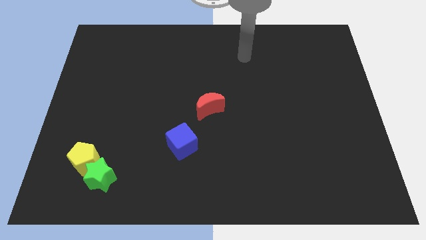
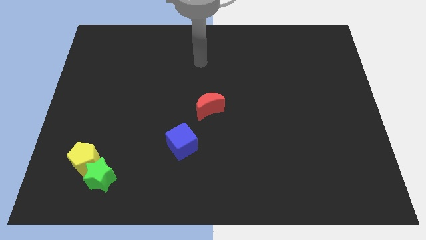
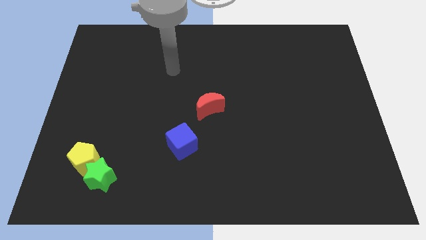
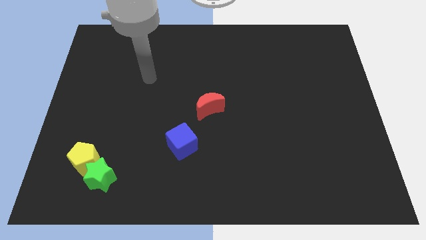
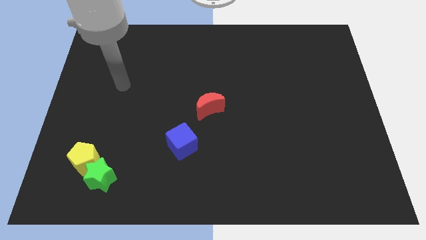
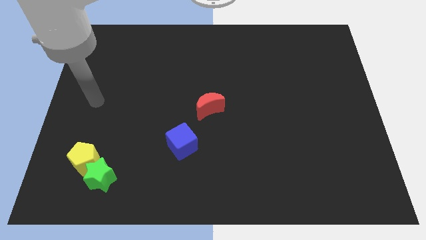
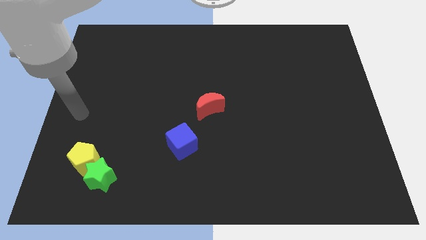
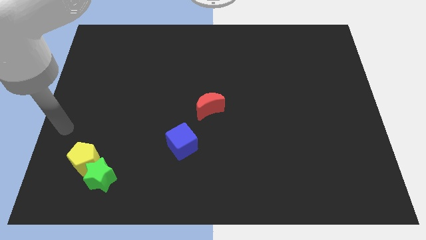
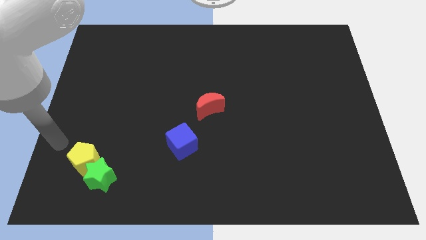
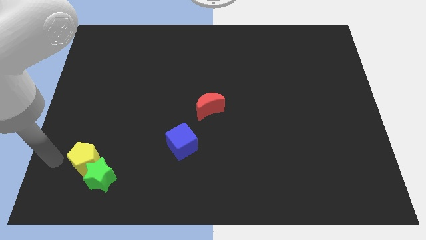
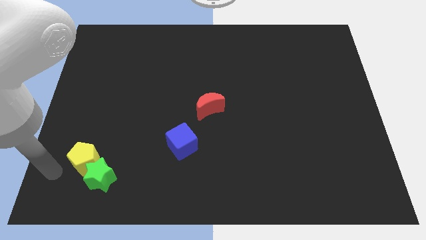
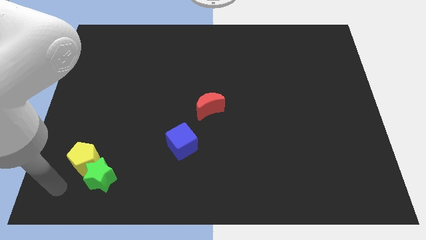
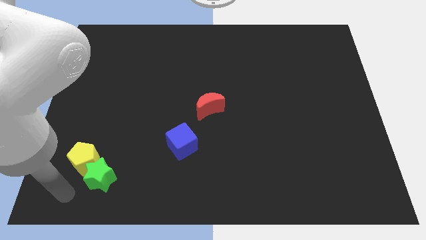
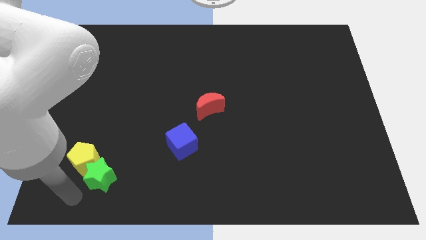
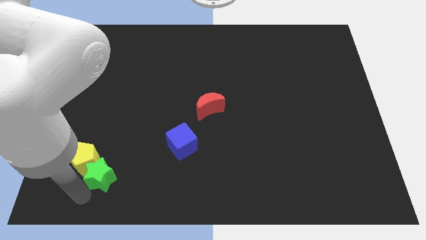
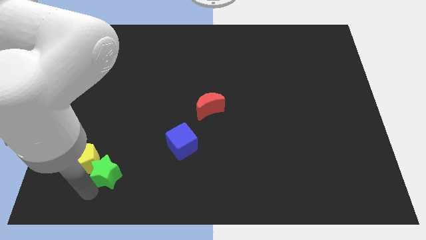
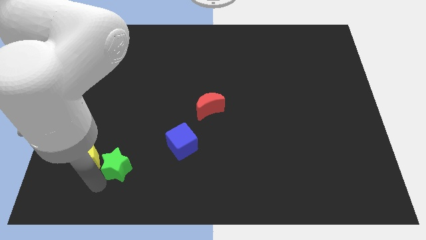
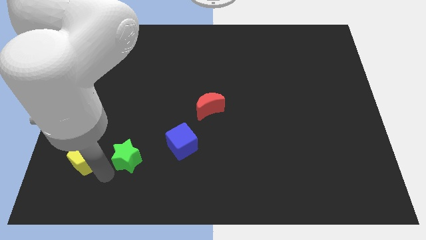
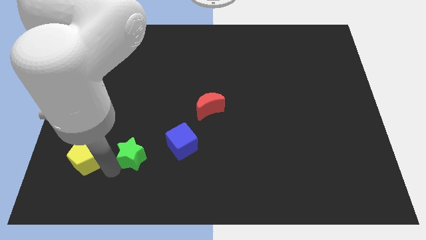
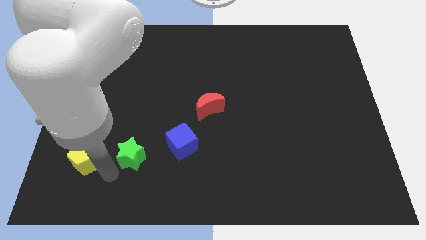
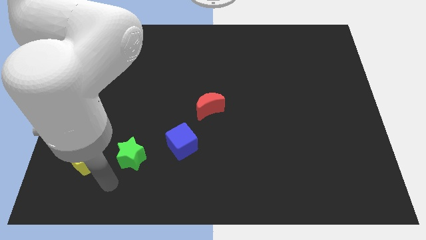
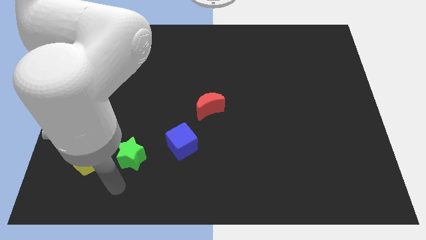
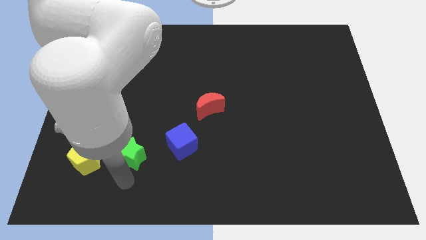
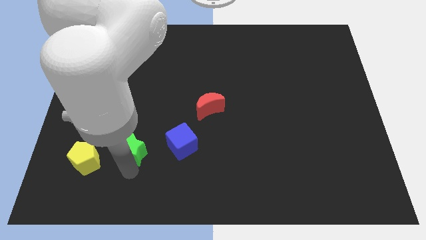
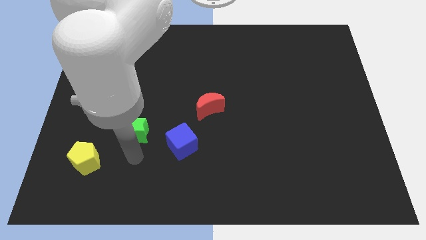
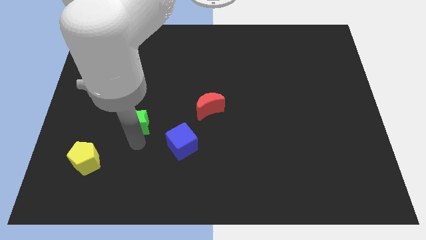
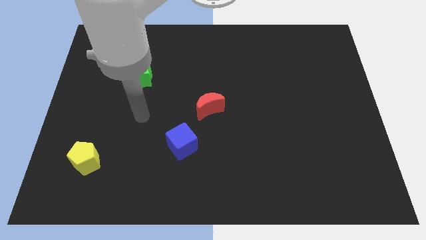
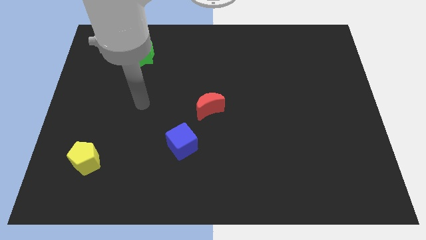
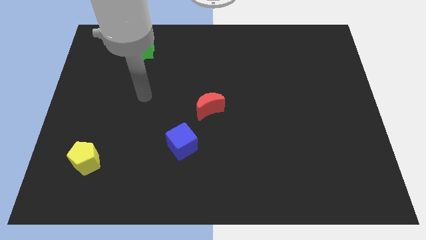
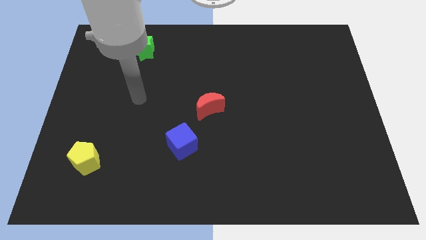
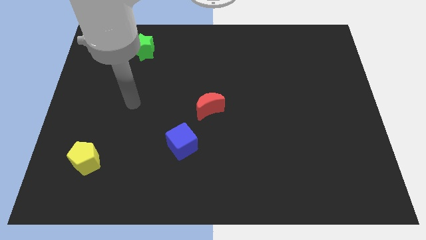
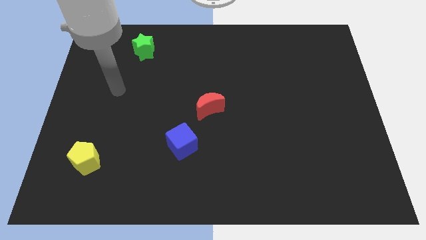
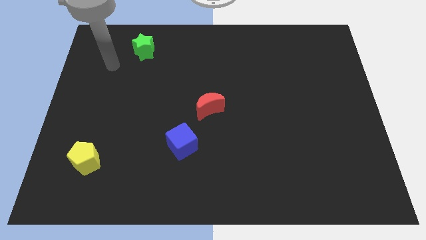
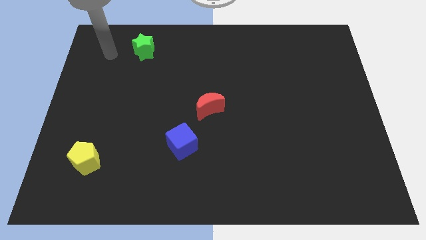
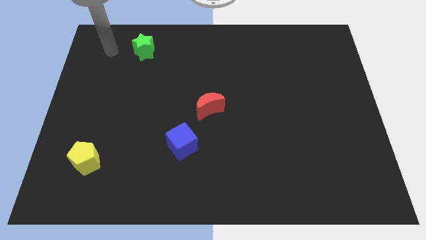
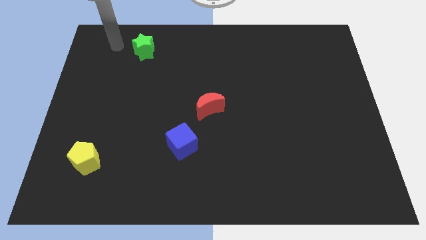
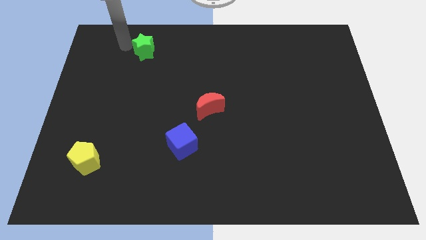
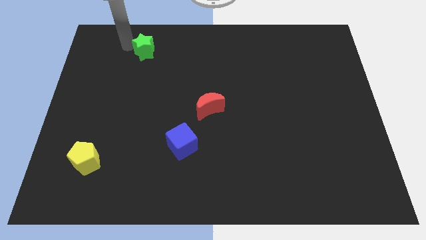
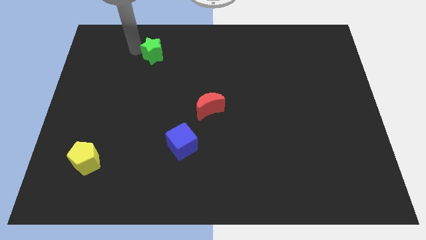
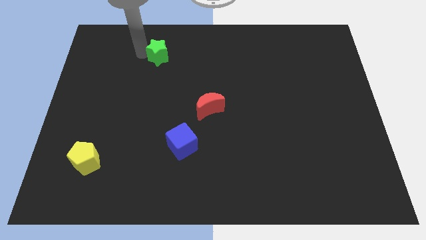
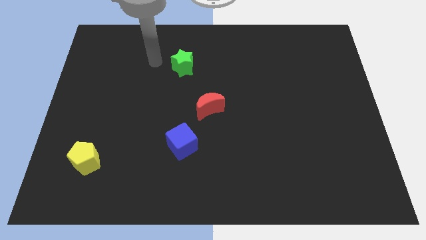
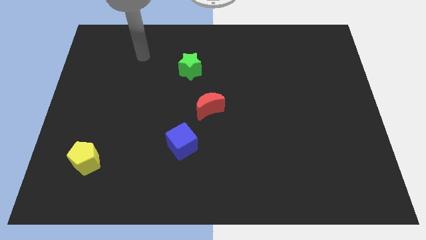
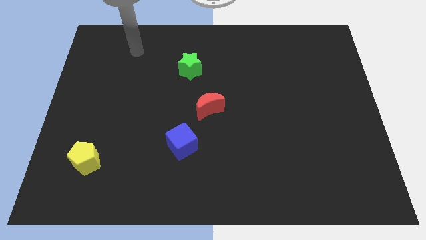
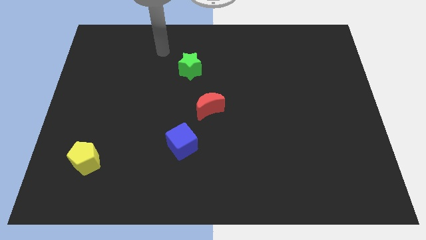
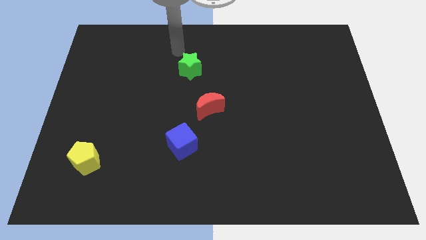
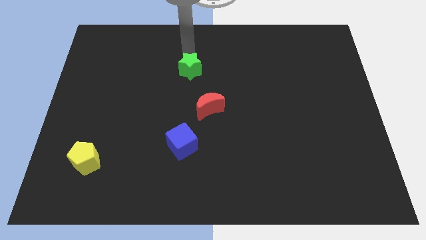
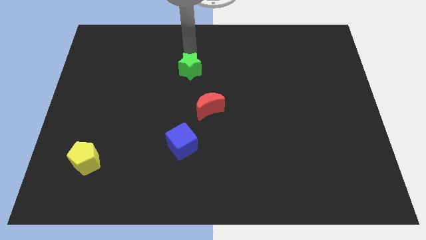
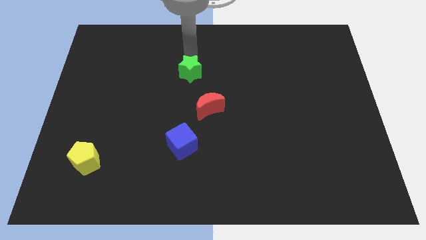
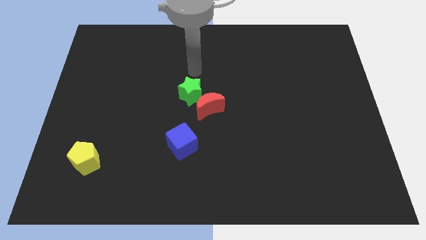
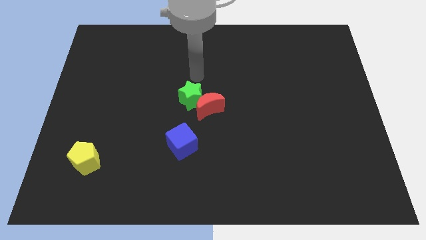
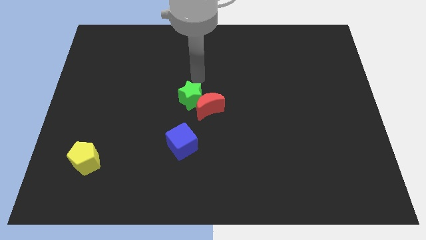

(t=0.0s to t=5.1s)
push the green star next to the red moon

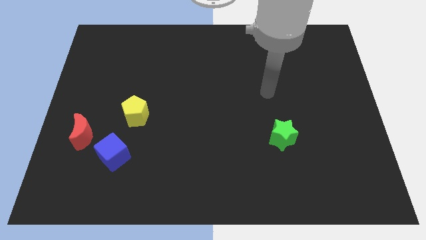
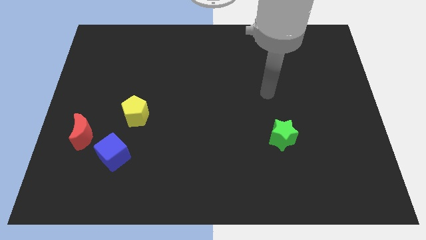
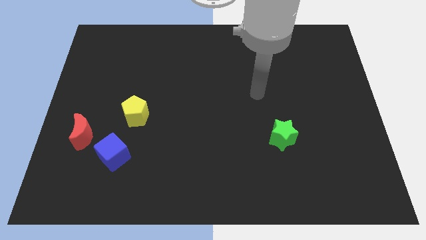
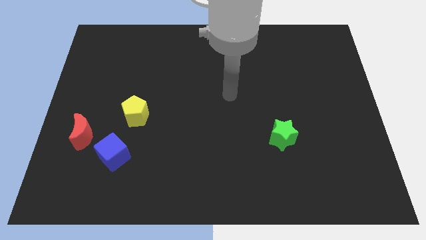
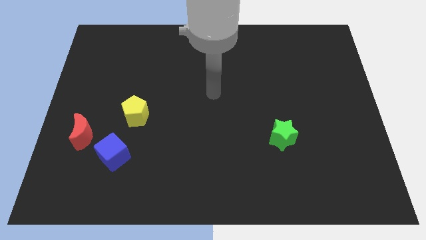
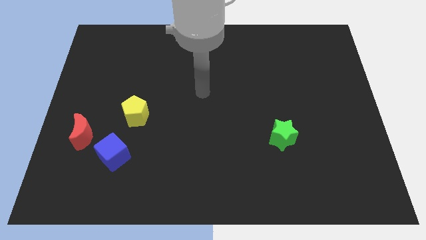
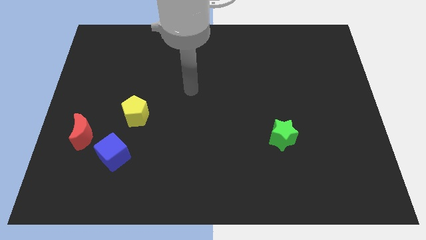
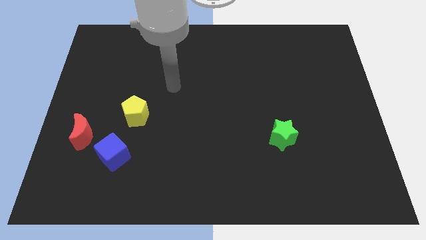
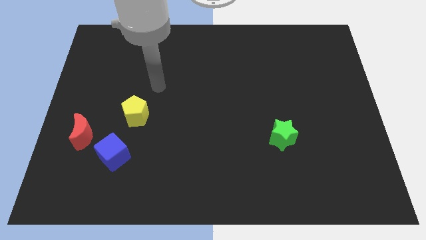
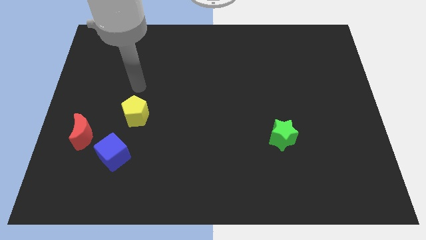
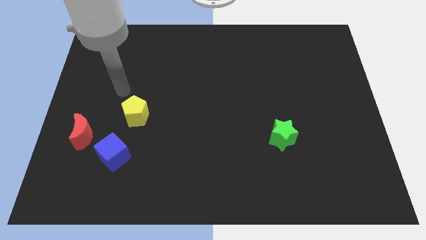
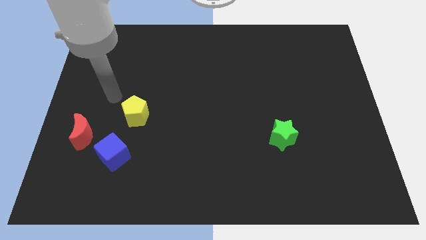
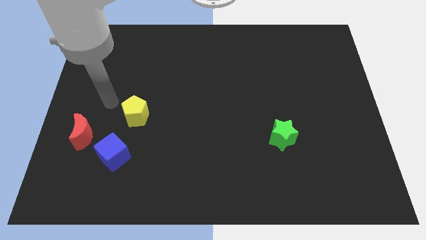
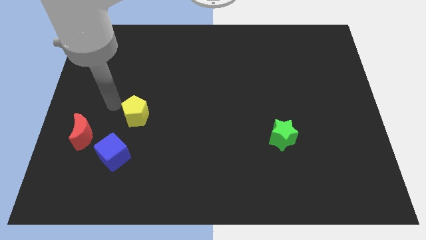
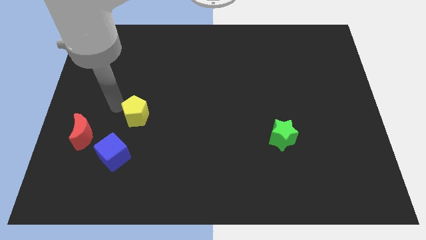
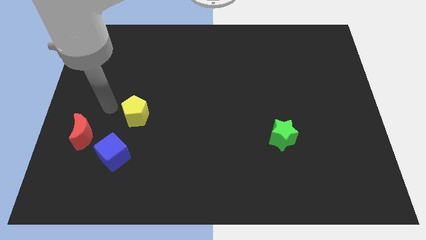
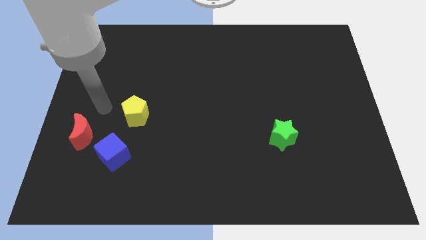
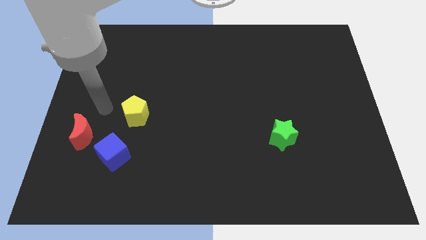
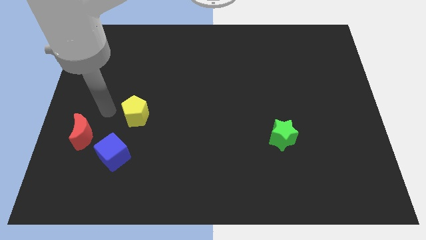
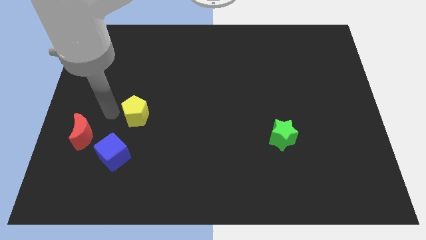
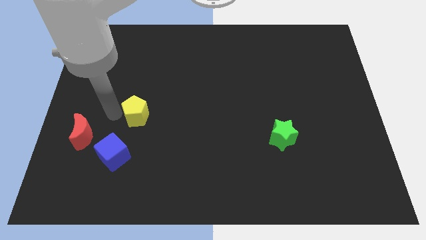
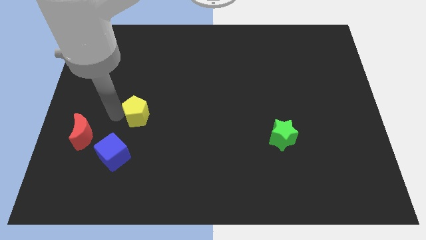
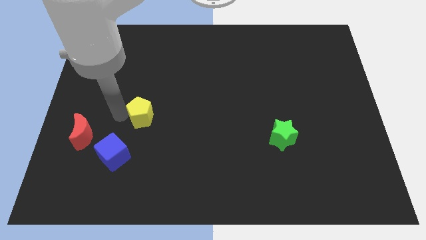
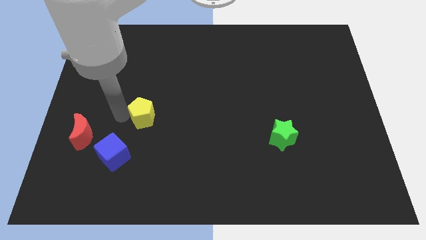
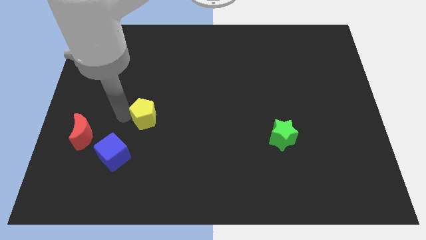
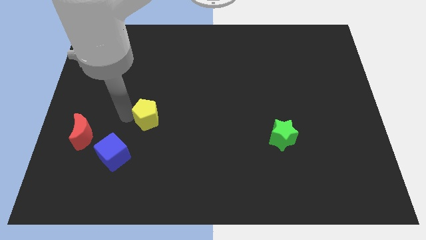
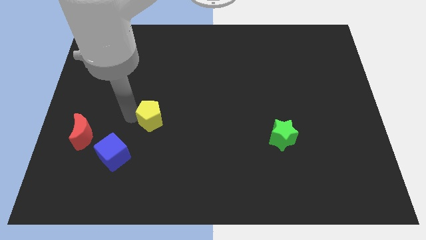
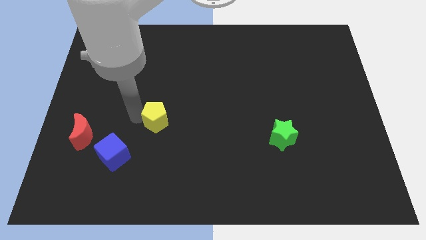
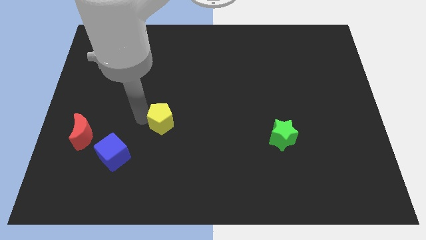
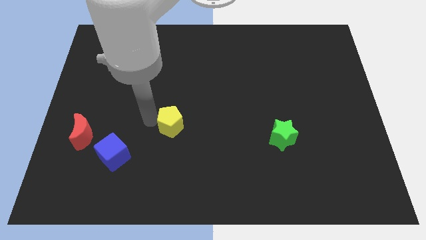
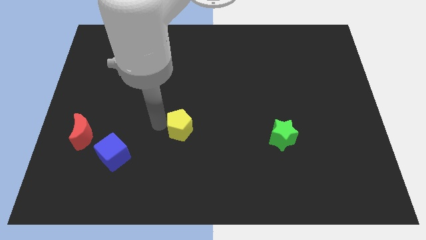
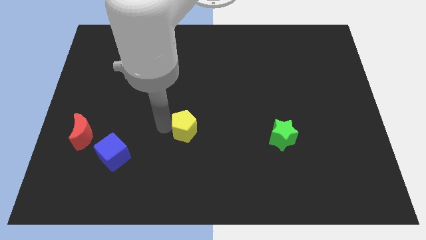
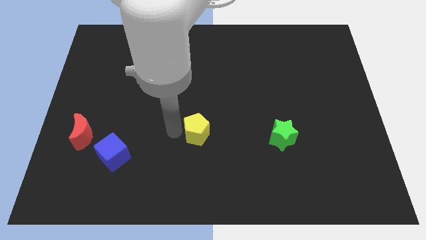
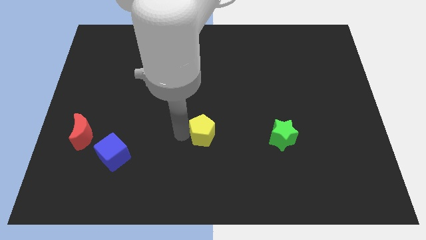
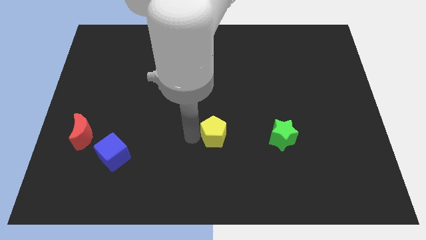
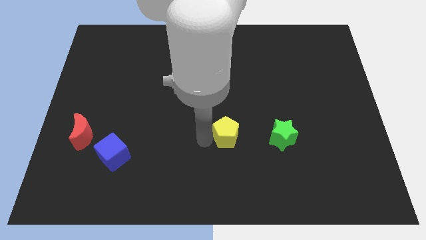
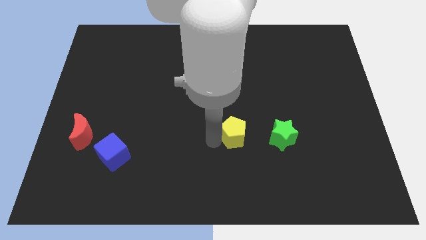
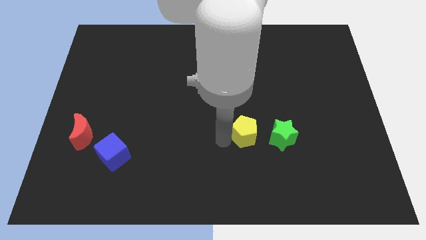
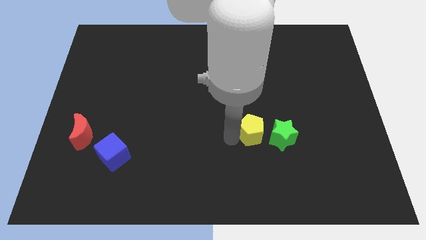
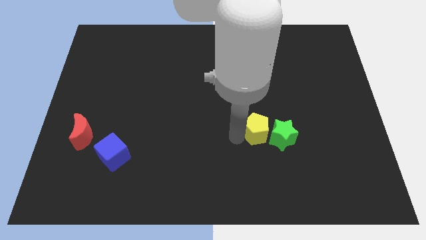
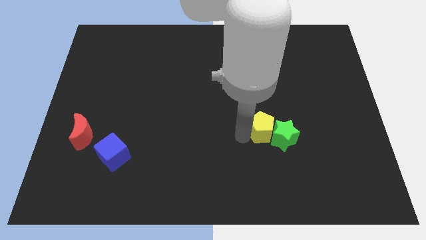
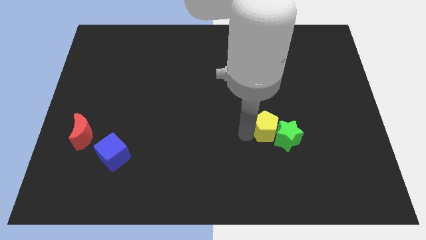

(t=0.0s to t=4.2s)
slide the yellow block to the green block
